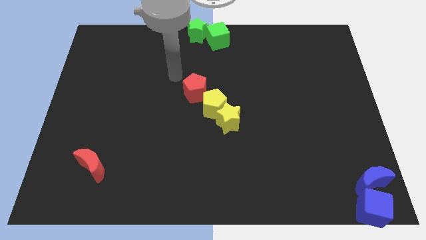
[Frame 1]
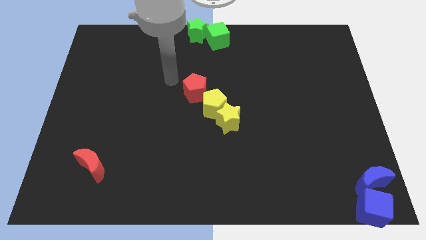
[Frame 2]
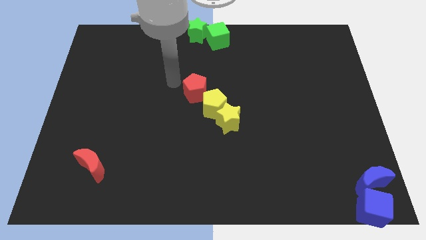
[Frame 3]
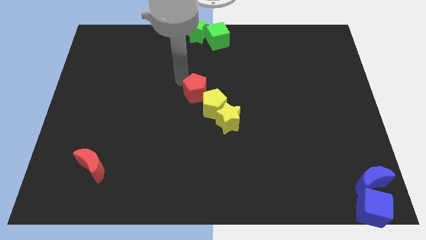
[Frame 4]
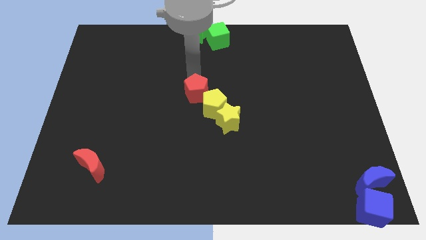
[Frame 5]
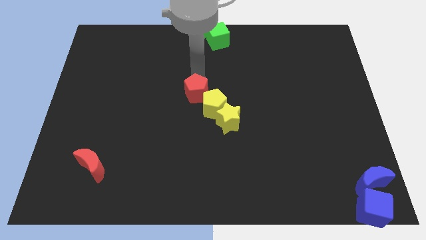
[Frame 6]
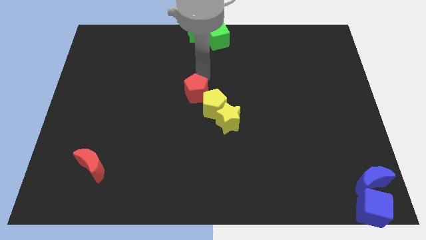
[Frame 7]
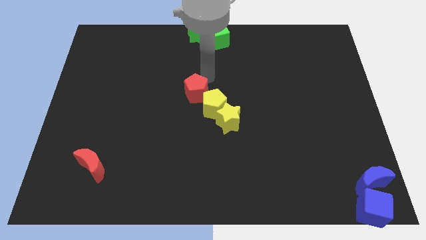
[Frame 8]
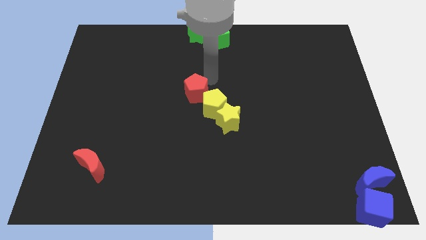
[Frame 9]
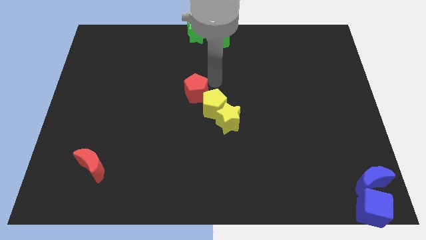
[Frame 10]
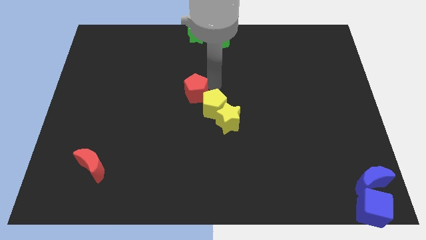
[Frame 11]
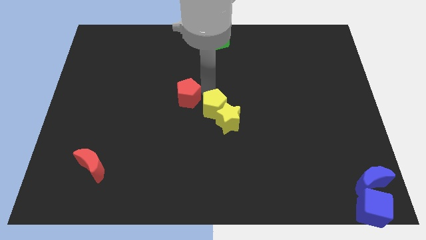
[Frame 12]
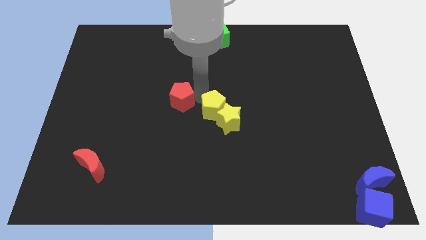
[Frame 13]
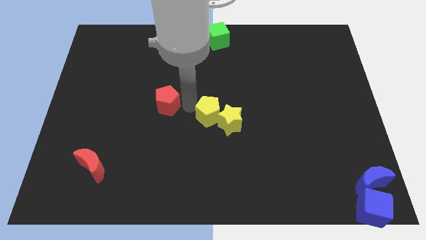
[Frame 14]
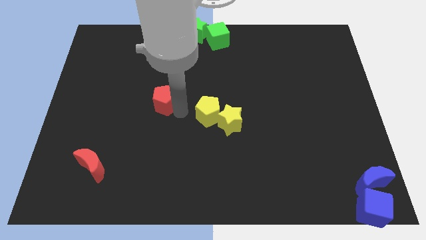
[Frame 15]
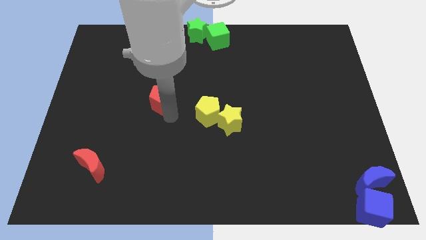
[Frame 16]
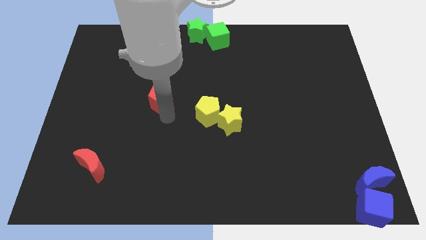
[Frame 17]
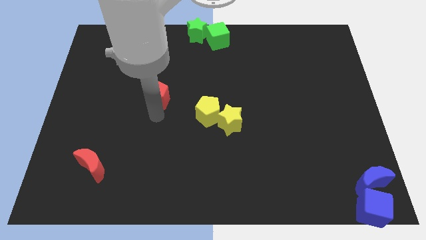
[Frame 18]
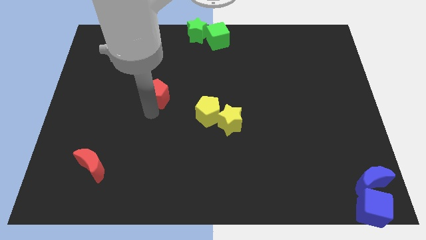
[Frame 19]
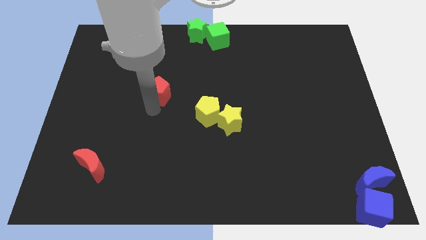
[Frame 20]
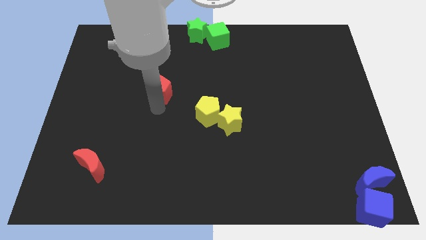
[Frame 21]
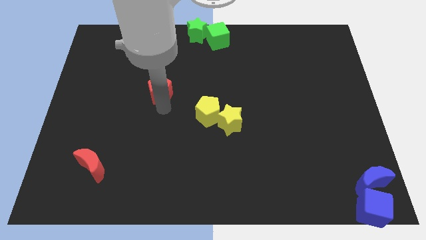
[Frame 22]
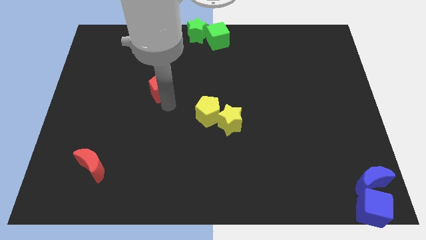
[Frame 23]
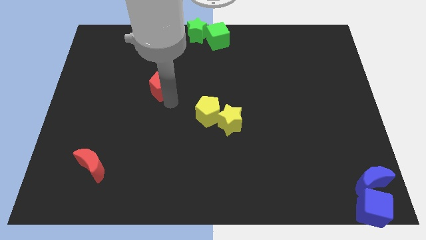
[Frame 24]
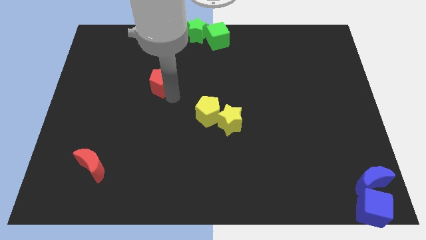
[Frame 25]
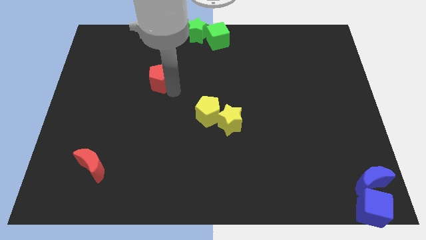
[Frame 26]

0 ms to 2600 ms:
separate the red pentagon from the yellow blocks

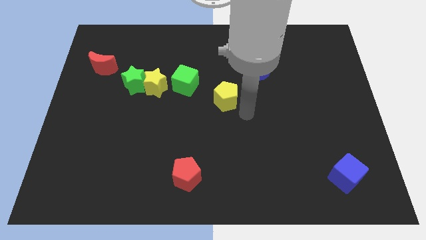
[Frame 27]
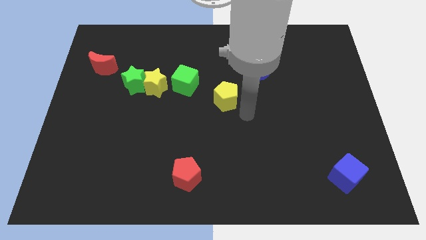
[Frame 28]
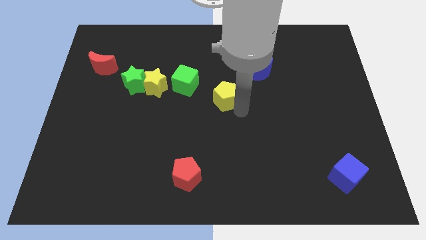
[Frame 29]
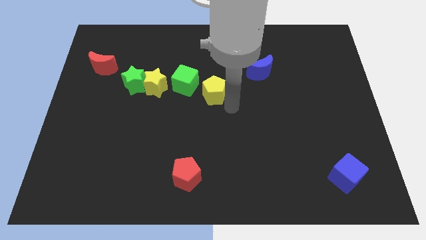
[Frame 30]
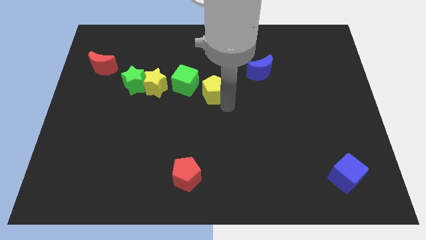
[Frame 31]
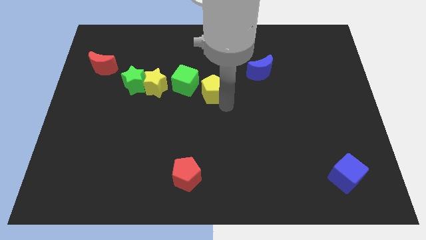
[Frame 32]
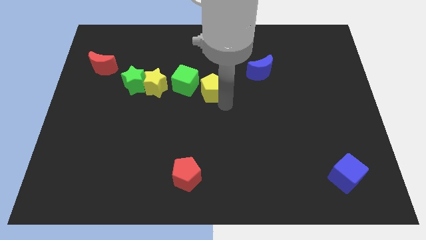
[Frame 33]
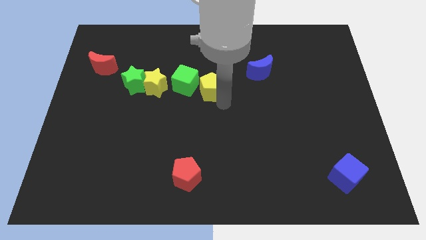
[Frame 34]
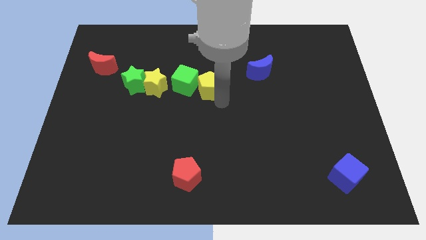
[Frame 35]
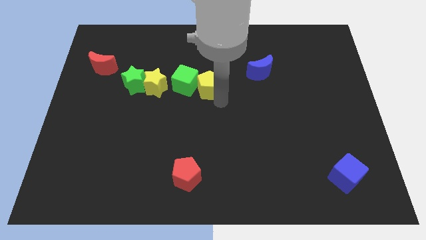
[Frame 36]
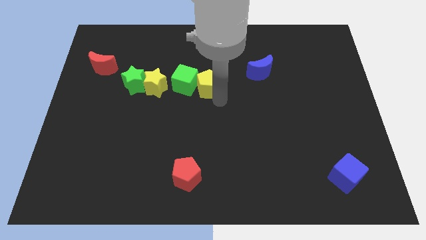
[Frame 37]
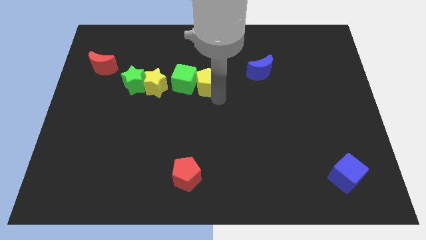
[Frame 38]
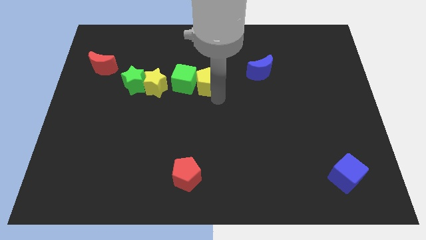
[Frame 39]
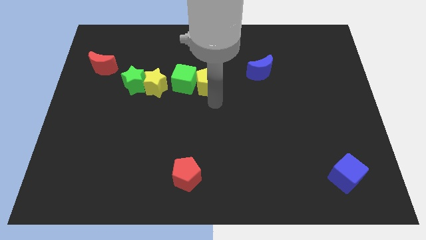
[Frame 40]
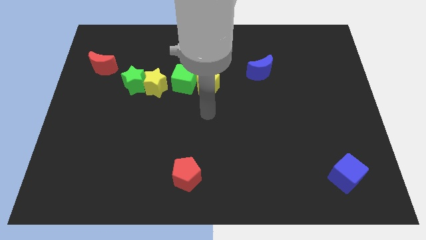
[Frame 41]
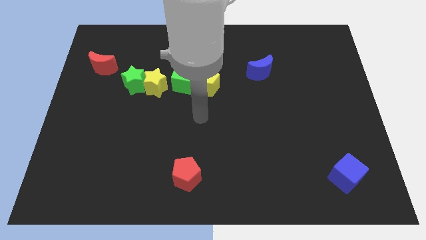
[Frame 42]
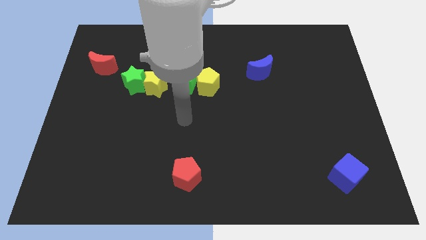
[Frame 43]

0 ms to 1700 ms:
move the yellow pentagon close to the green cube

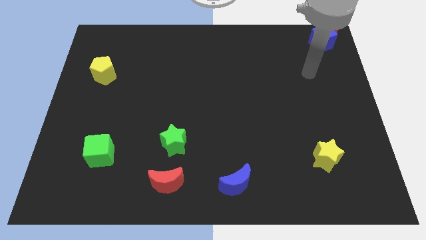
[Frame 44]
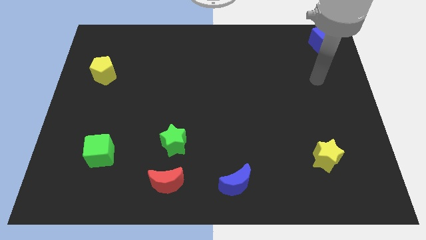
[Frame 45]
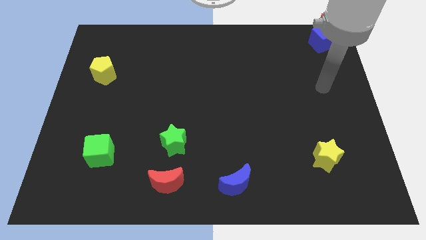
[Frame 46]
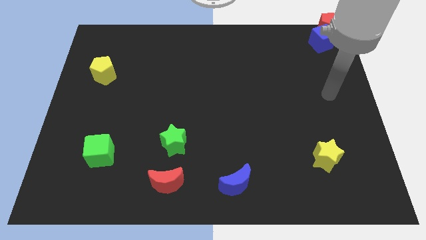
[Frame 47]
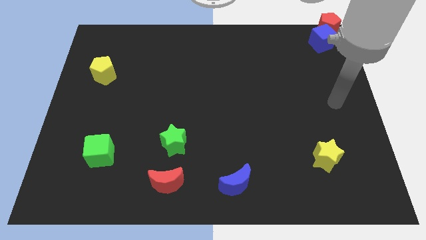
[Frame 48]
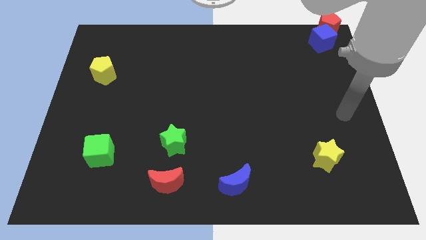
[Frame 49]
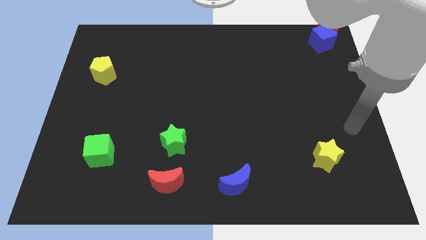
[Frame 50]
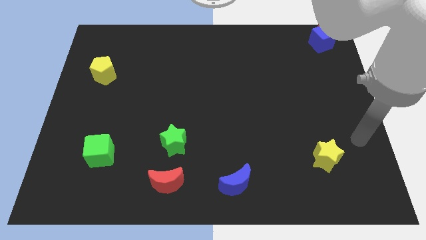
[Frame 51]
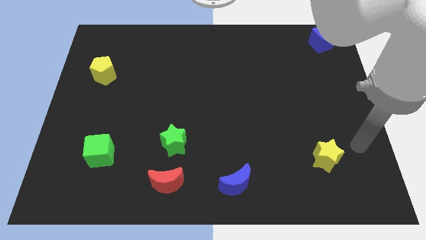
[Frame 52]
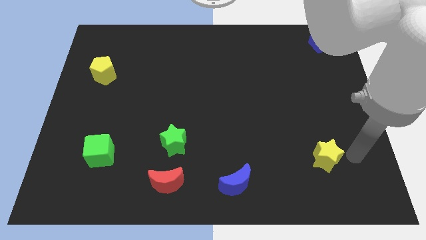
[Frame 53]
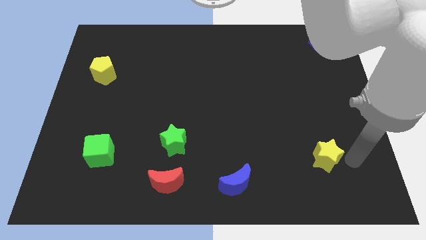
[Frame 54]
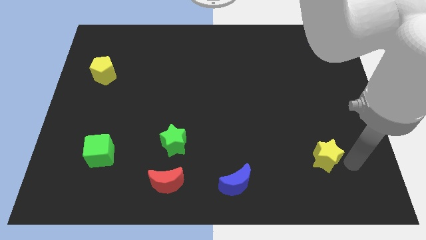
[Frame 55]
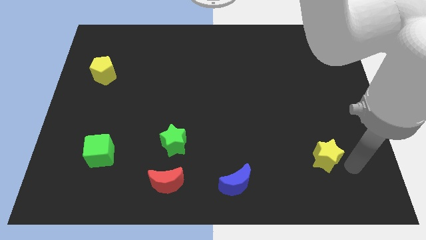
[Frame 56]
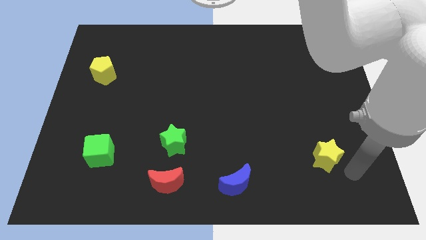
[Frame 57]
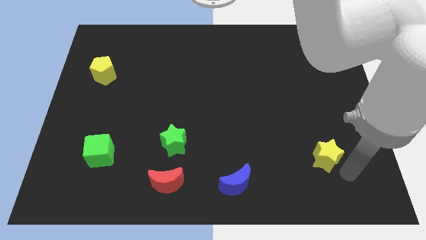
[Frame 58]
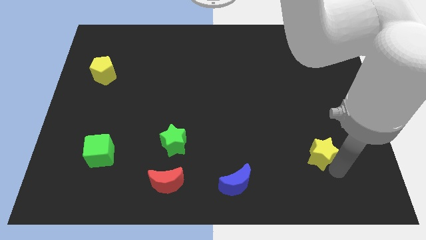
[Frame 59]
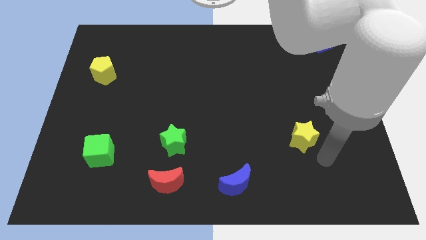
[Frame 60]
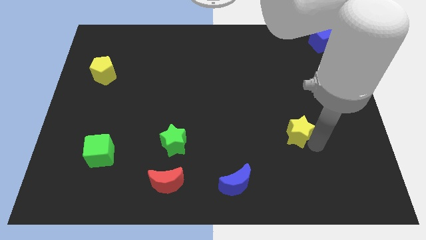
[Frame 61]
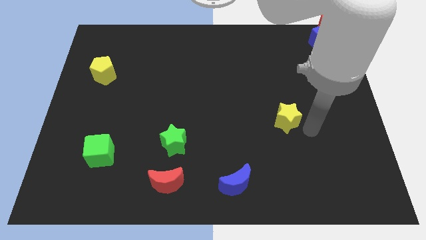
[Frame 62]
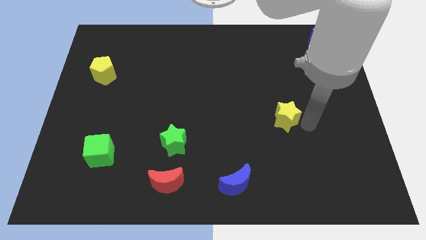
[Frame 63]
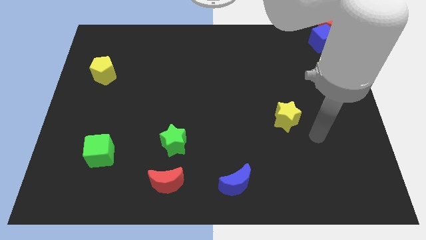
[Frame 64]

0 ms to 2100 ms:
push the yellow star to the top right of the blue crescent

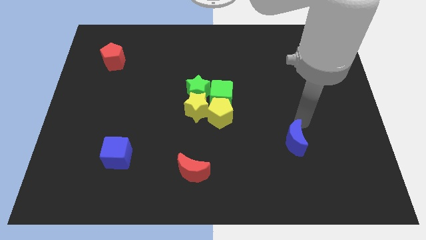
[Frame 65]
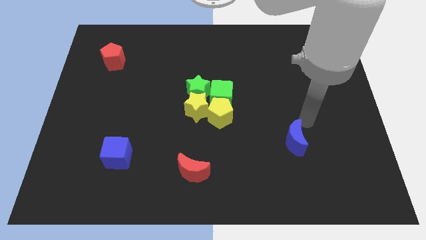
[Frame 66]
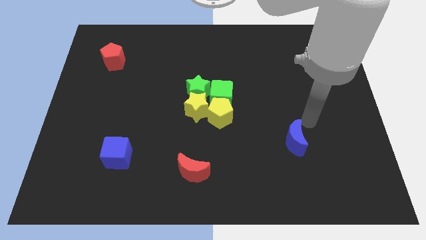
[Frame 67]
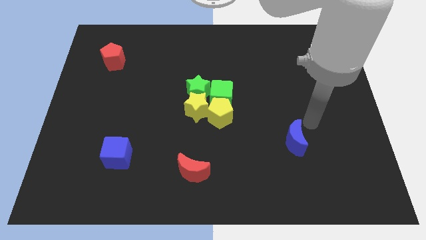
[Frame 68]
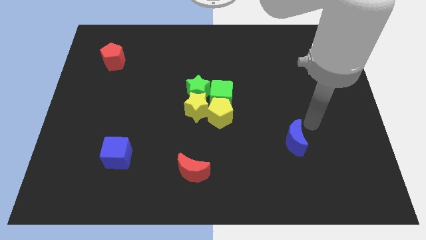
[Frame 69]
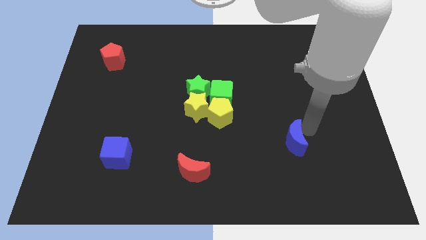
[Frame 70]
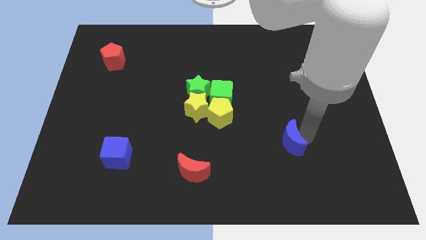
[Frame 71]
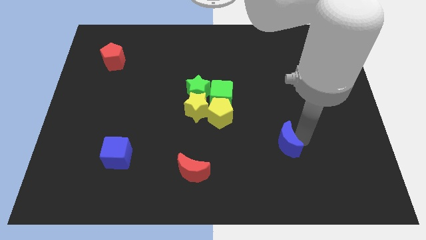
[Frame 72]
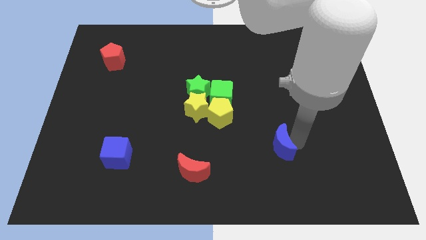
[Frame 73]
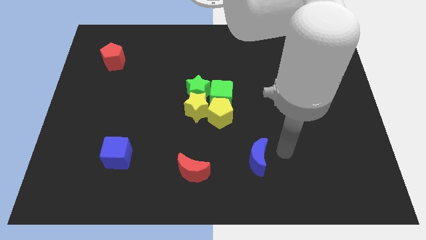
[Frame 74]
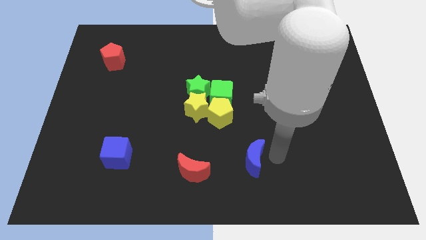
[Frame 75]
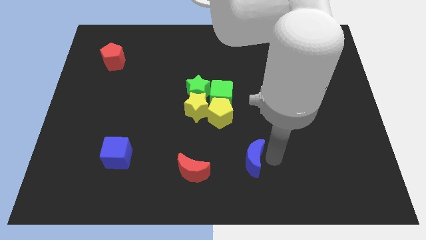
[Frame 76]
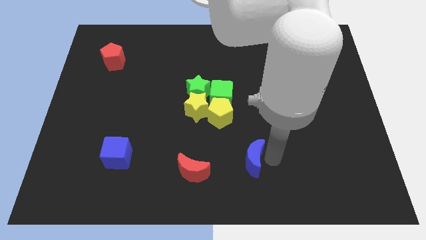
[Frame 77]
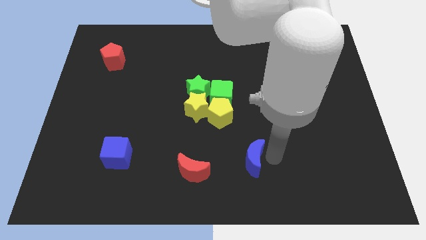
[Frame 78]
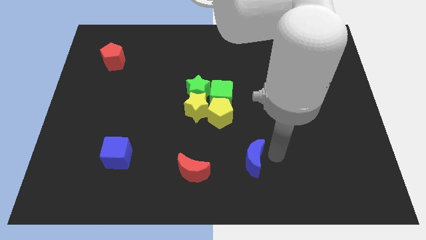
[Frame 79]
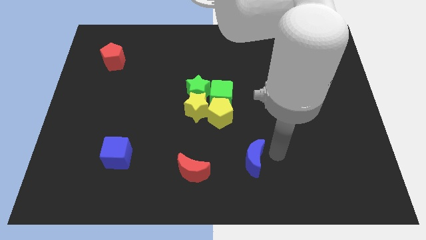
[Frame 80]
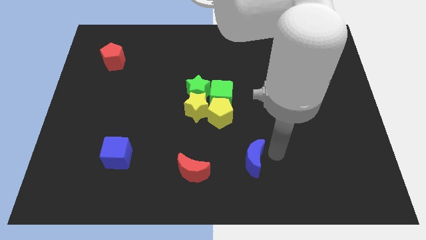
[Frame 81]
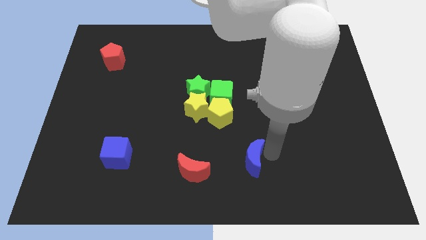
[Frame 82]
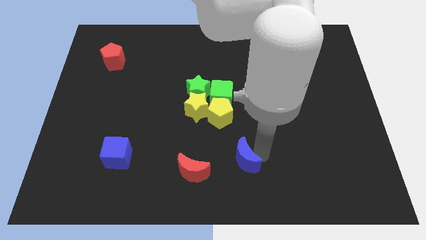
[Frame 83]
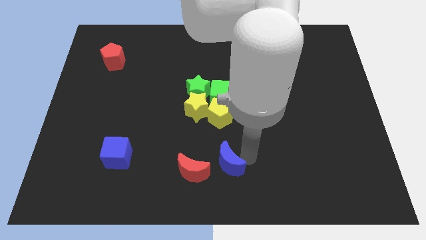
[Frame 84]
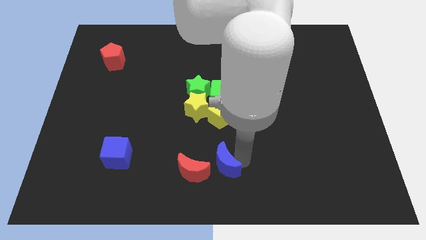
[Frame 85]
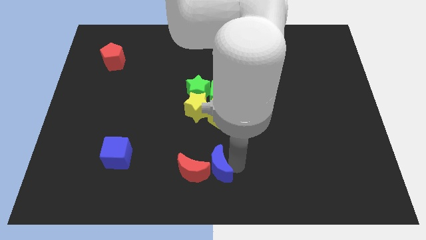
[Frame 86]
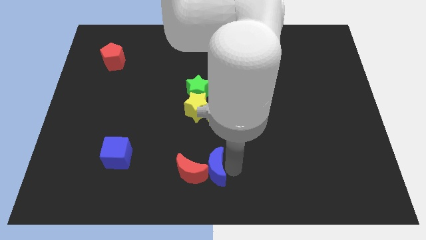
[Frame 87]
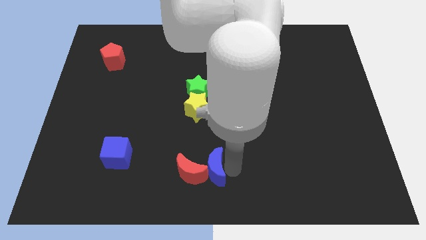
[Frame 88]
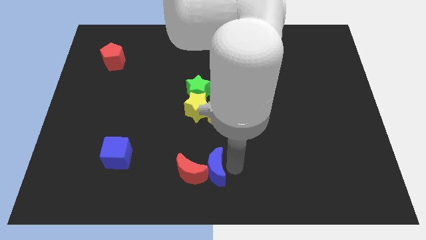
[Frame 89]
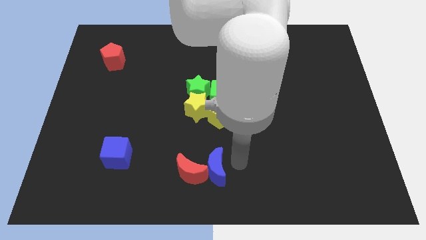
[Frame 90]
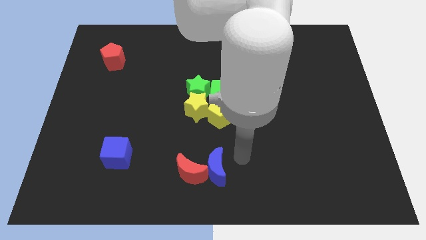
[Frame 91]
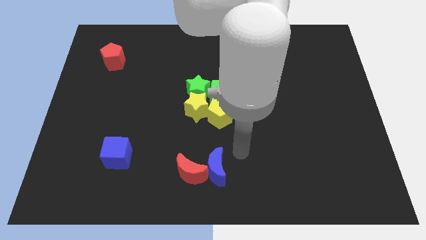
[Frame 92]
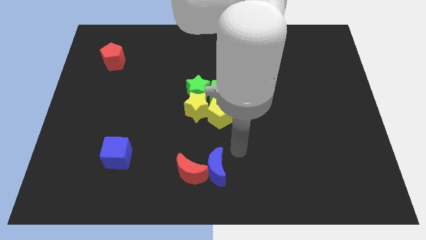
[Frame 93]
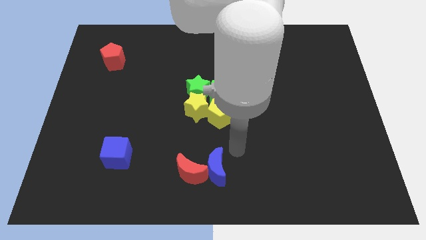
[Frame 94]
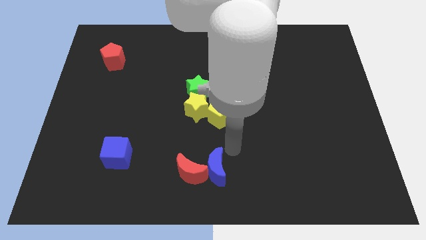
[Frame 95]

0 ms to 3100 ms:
push the blue moon into the red moon
